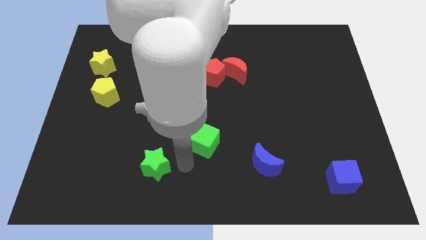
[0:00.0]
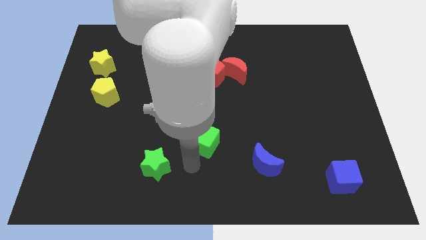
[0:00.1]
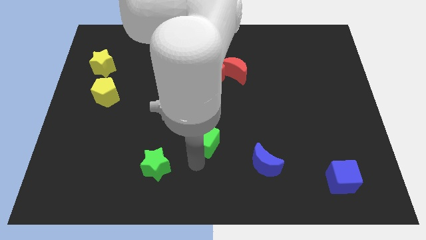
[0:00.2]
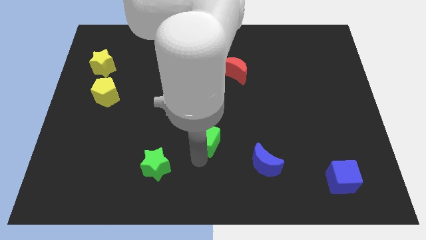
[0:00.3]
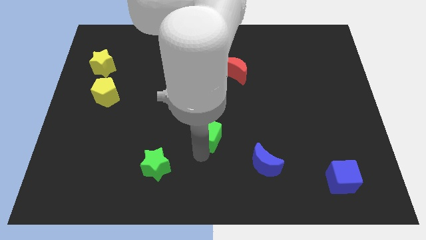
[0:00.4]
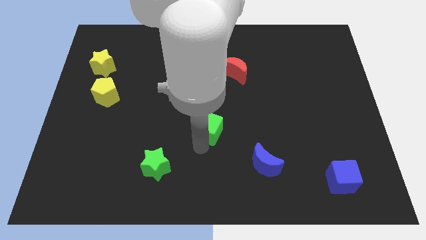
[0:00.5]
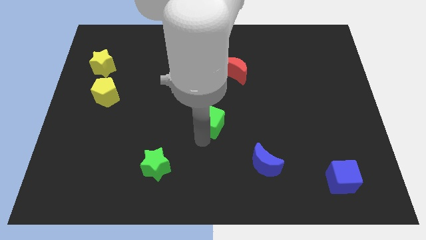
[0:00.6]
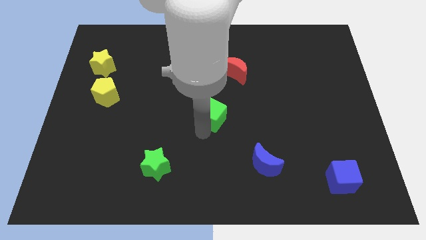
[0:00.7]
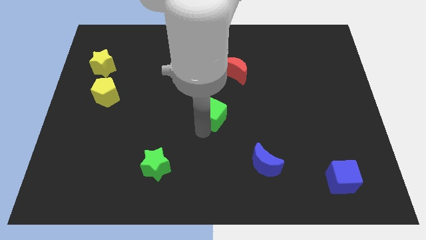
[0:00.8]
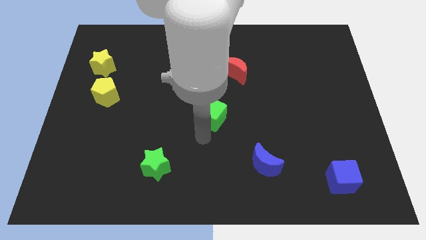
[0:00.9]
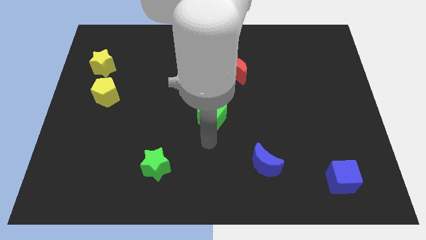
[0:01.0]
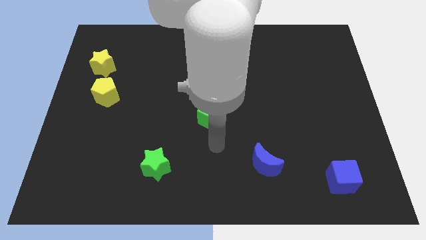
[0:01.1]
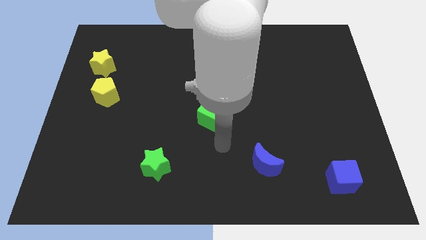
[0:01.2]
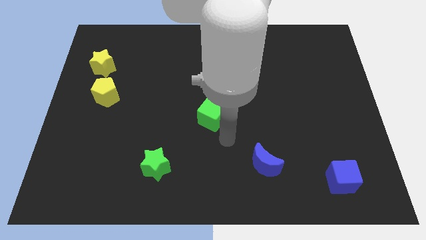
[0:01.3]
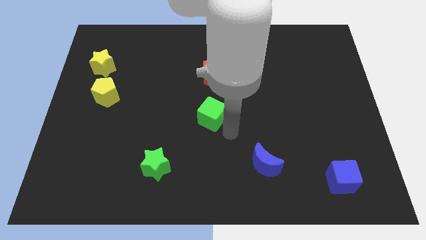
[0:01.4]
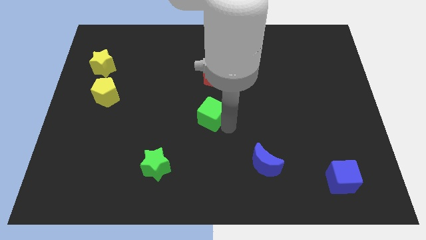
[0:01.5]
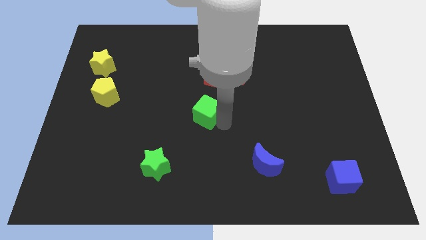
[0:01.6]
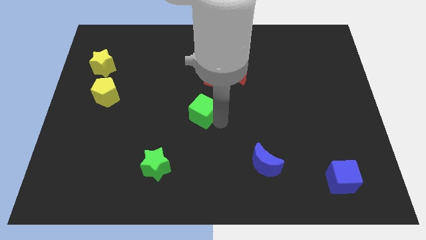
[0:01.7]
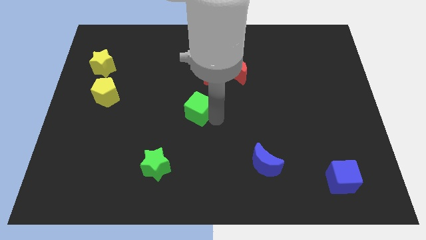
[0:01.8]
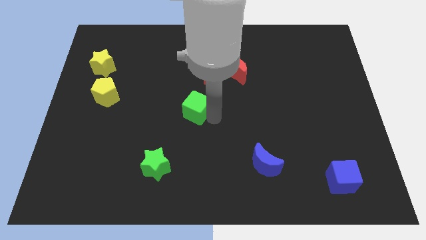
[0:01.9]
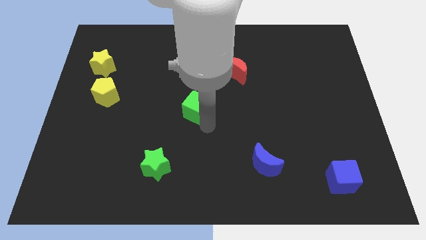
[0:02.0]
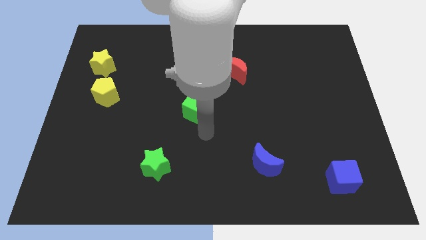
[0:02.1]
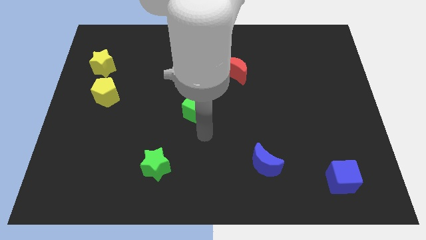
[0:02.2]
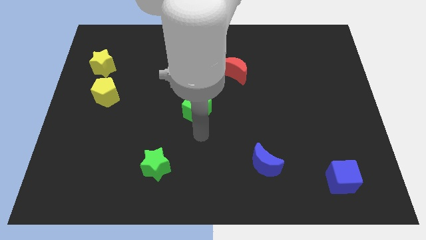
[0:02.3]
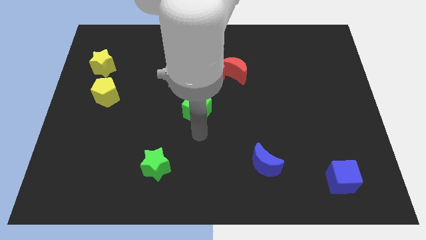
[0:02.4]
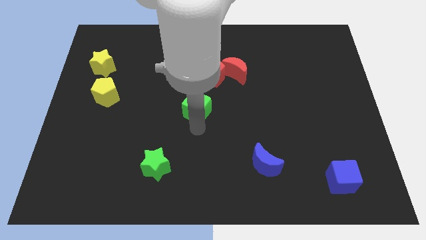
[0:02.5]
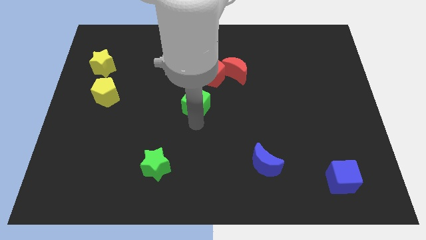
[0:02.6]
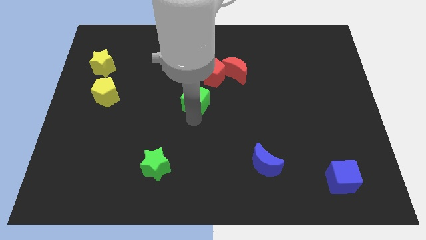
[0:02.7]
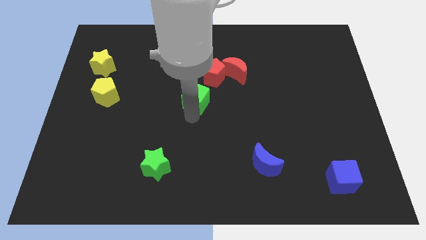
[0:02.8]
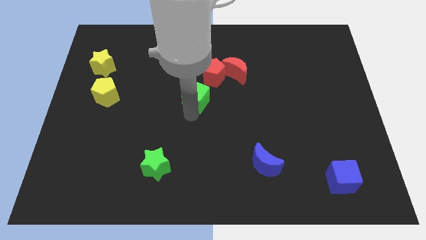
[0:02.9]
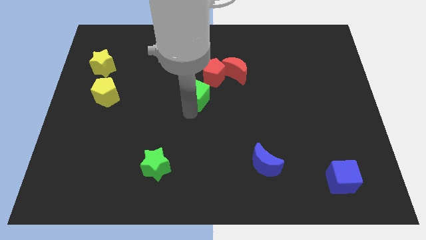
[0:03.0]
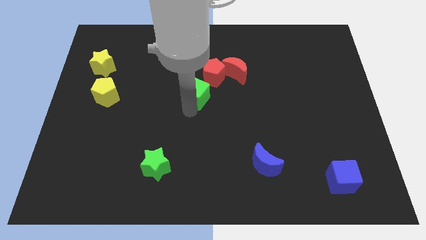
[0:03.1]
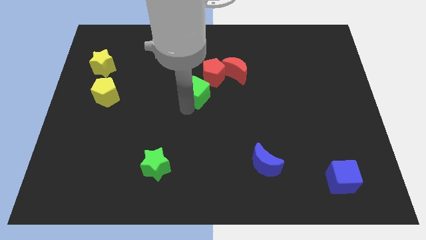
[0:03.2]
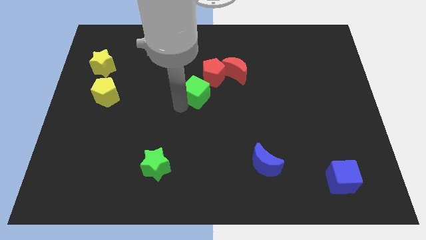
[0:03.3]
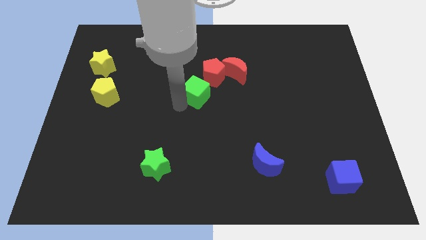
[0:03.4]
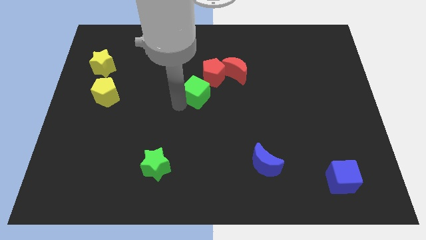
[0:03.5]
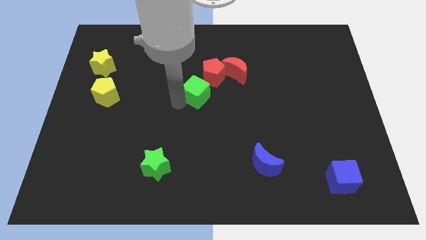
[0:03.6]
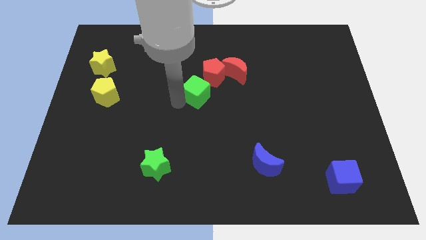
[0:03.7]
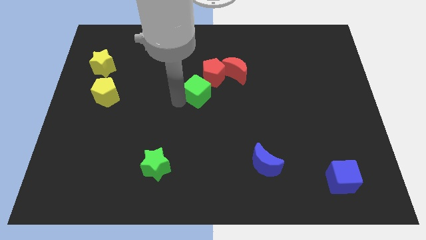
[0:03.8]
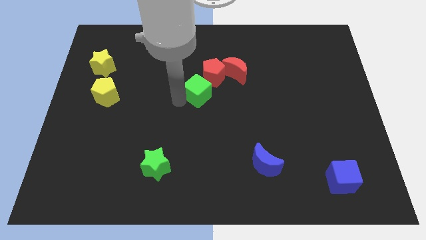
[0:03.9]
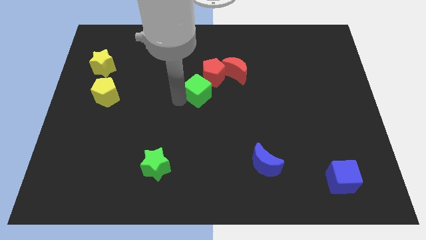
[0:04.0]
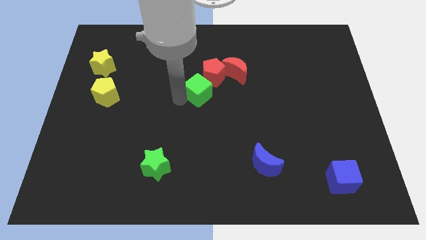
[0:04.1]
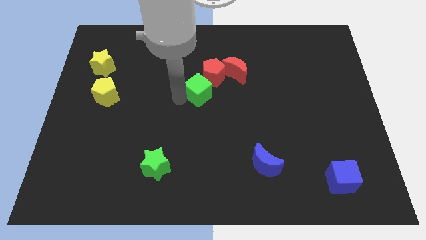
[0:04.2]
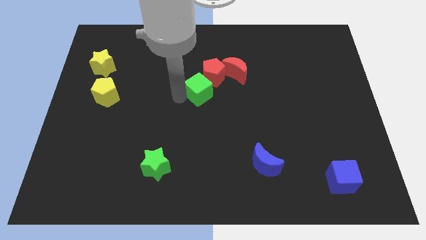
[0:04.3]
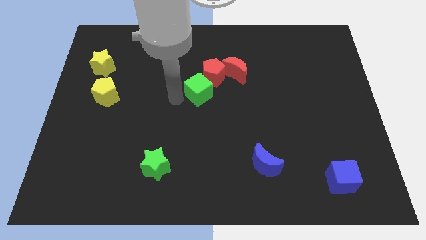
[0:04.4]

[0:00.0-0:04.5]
push the green cube to the right of the yellow pentagon

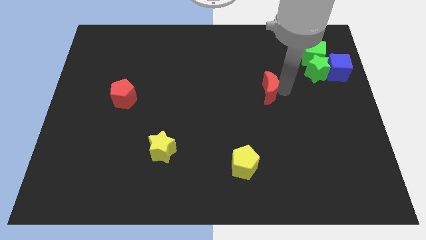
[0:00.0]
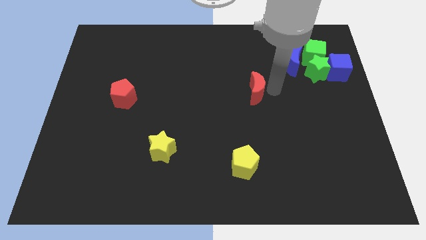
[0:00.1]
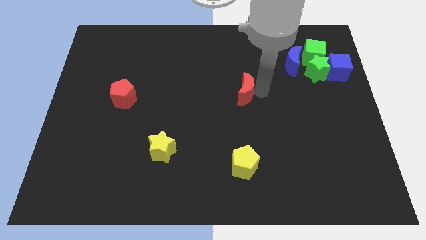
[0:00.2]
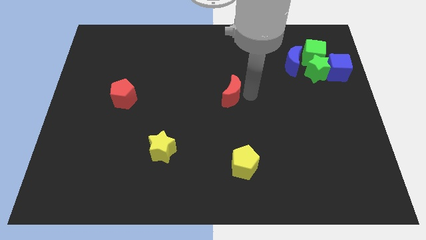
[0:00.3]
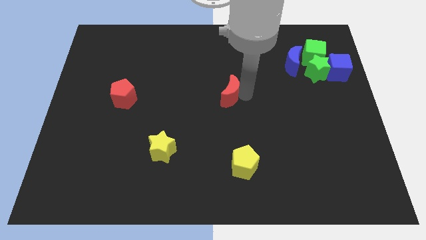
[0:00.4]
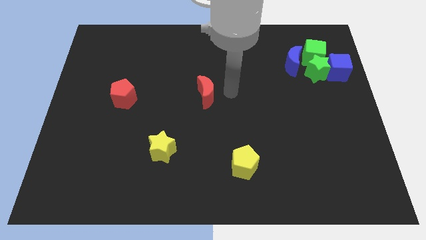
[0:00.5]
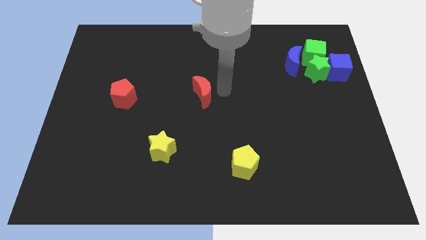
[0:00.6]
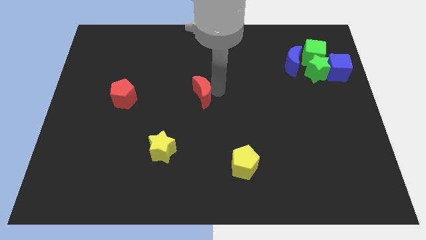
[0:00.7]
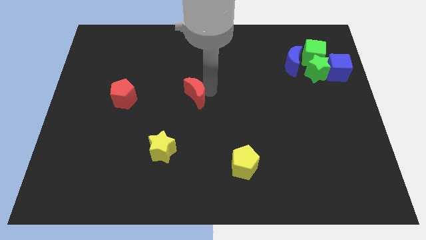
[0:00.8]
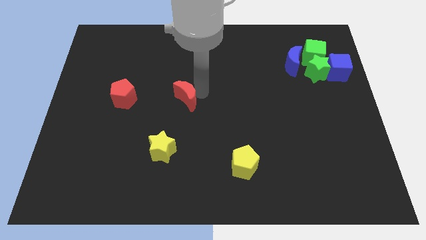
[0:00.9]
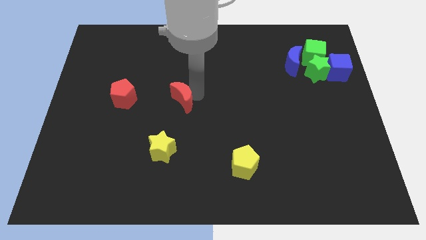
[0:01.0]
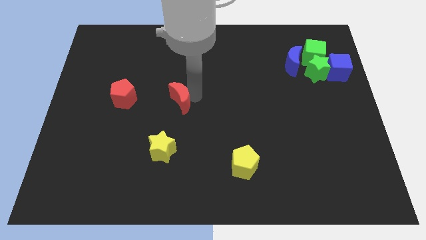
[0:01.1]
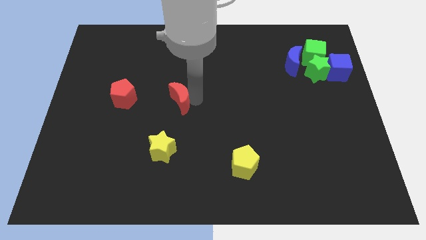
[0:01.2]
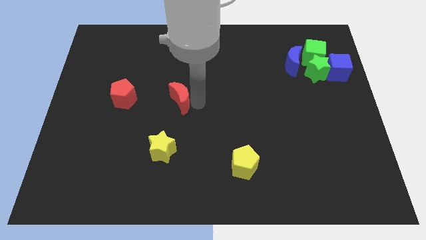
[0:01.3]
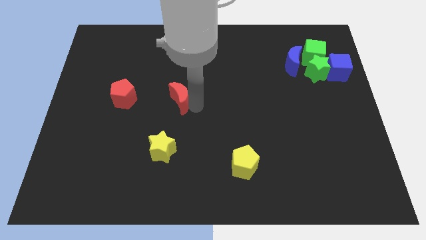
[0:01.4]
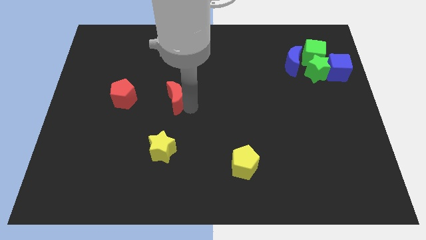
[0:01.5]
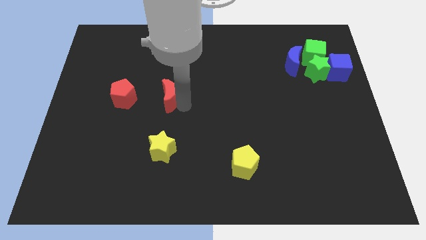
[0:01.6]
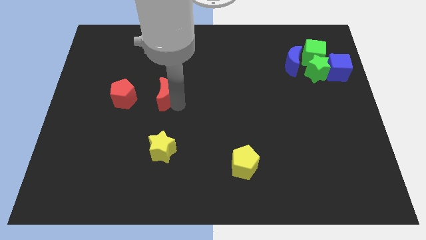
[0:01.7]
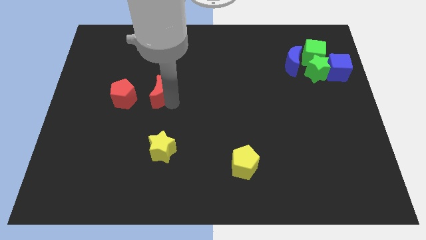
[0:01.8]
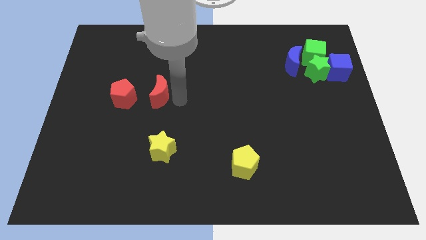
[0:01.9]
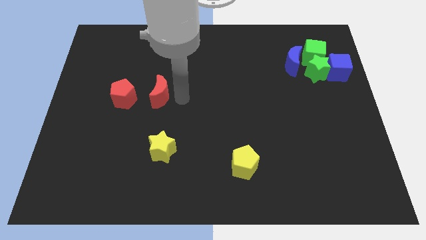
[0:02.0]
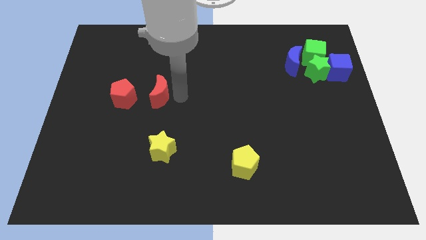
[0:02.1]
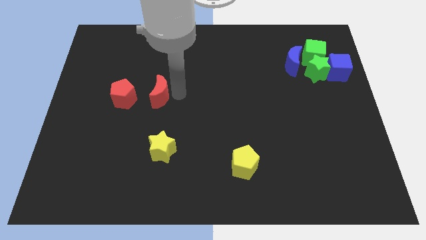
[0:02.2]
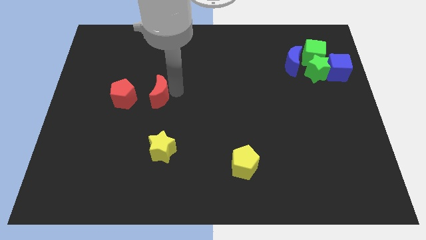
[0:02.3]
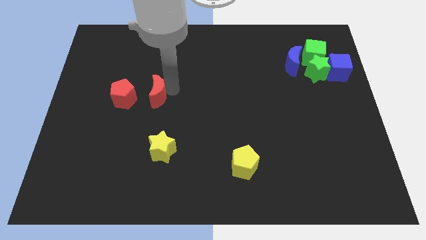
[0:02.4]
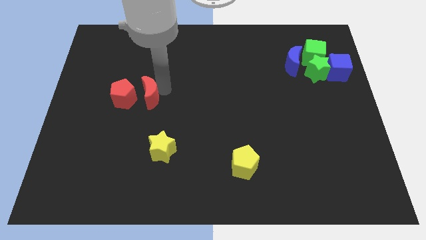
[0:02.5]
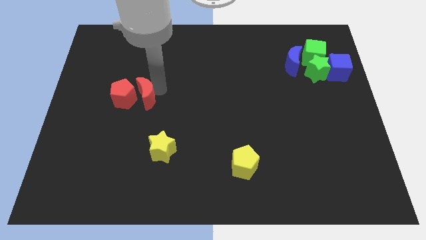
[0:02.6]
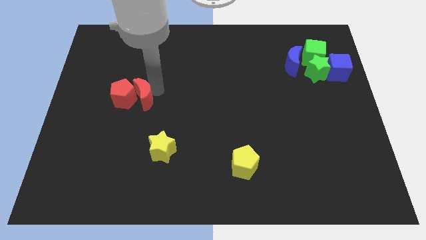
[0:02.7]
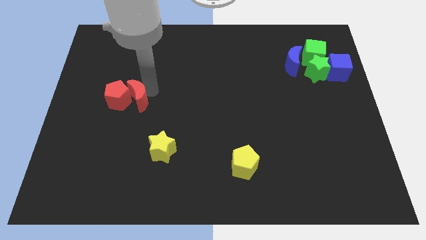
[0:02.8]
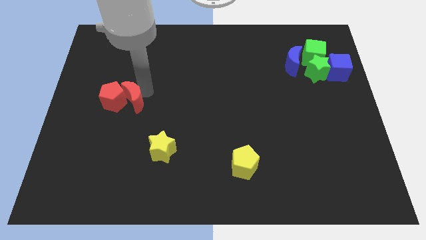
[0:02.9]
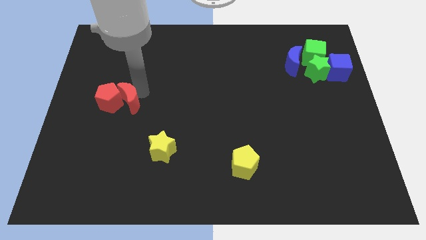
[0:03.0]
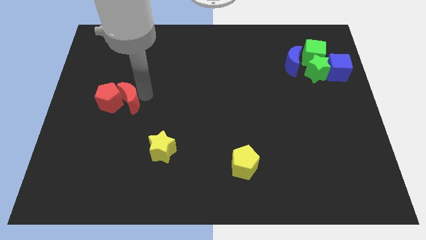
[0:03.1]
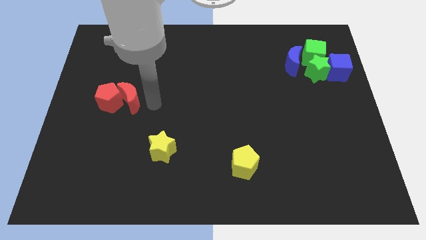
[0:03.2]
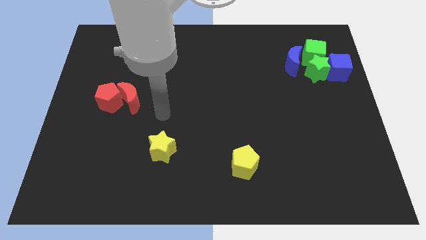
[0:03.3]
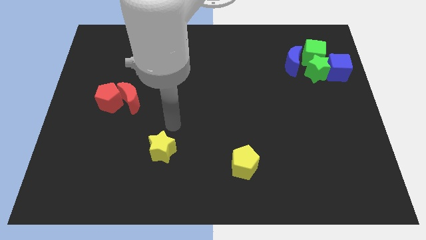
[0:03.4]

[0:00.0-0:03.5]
push the red blocks towards the center left side of the board

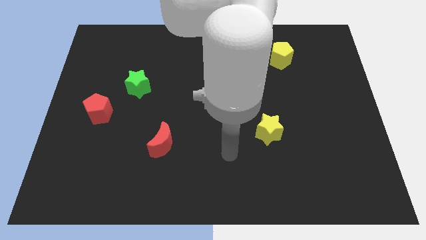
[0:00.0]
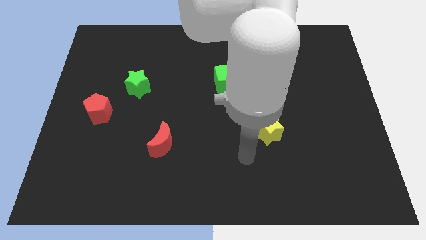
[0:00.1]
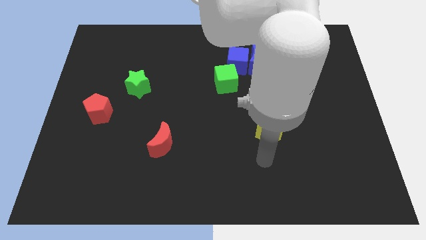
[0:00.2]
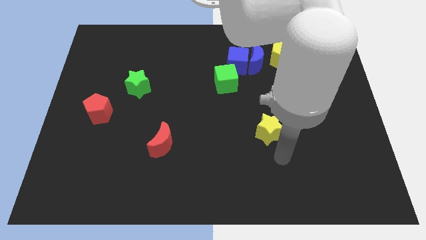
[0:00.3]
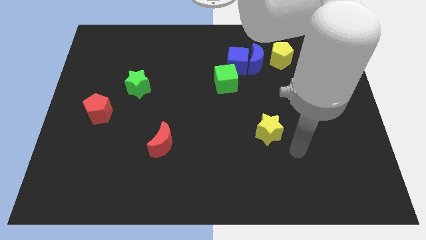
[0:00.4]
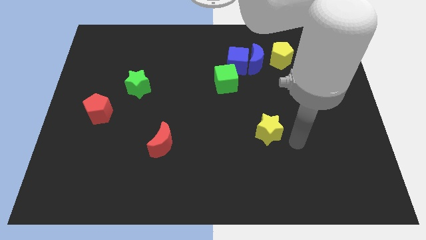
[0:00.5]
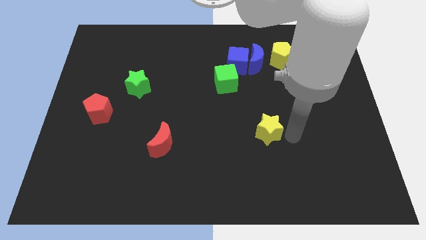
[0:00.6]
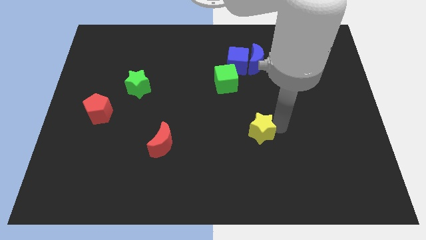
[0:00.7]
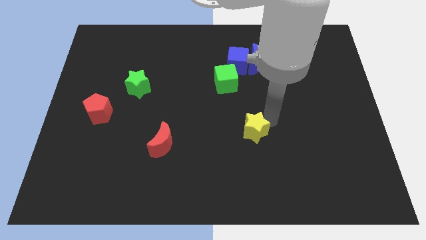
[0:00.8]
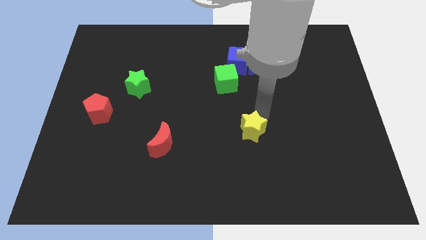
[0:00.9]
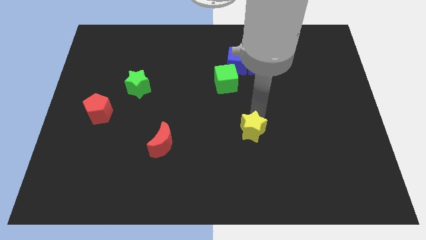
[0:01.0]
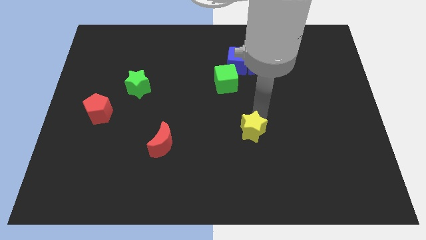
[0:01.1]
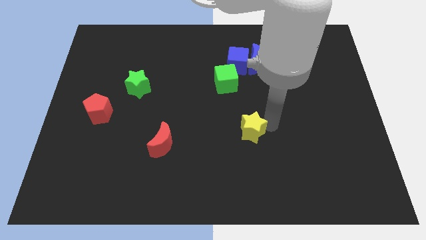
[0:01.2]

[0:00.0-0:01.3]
move the yellow star slight towards the left
